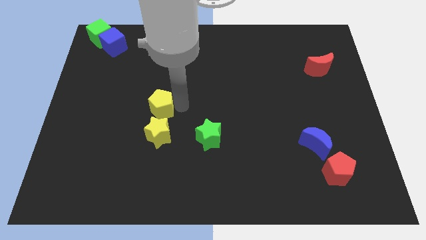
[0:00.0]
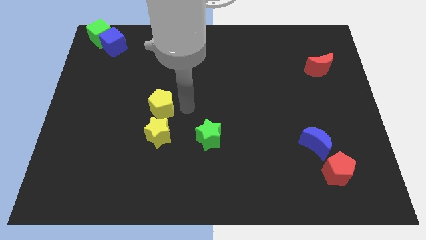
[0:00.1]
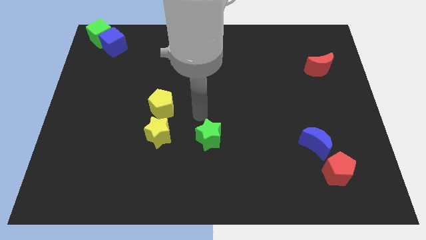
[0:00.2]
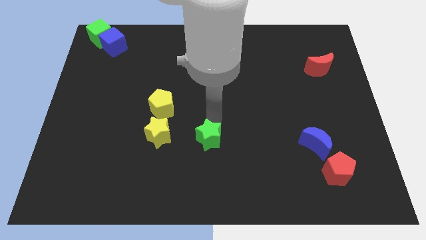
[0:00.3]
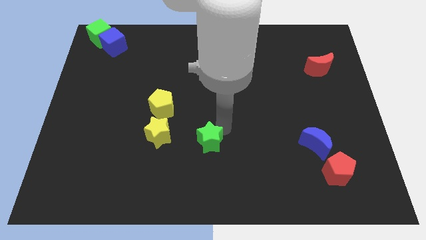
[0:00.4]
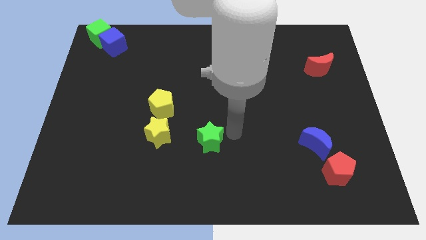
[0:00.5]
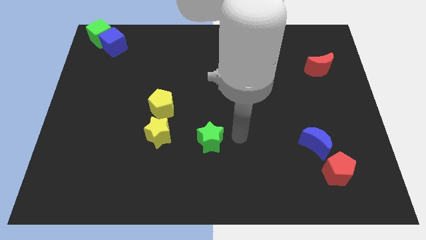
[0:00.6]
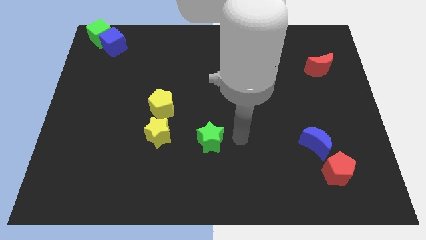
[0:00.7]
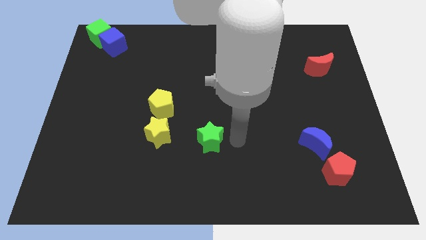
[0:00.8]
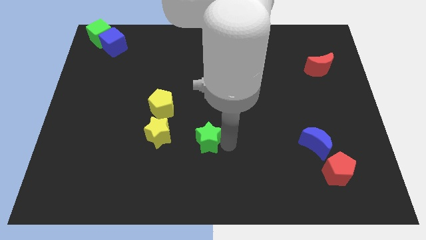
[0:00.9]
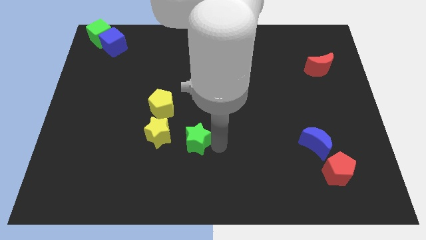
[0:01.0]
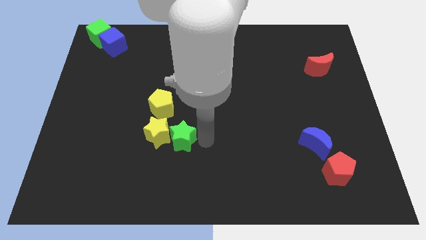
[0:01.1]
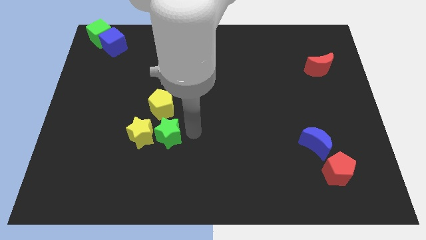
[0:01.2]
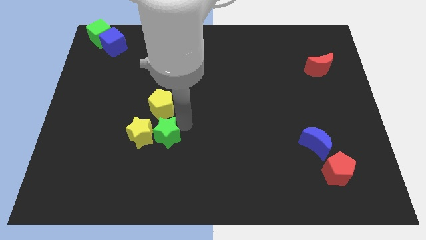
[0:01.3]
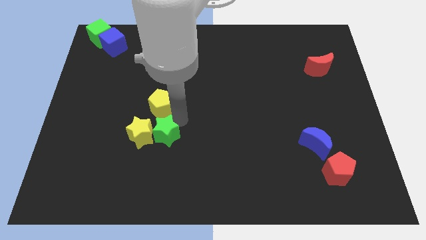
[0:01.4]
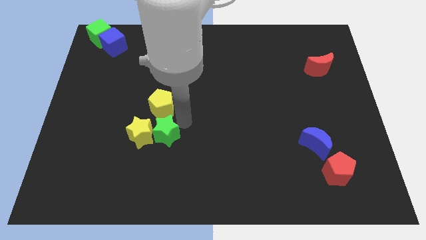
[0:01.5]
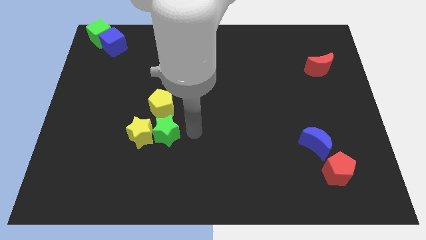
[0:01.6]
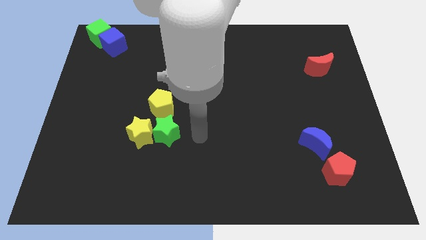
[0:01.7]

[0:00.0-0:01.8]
push the green star into yellow star

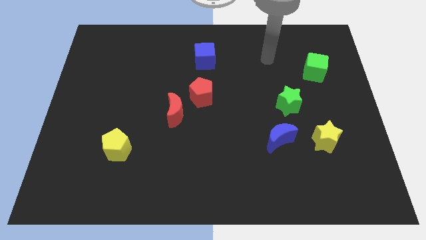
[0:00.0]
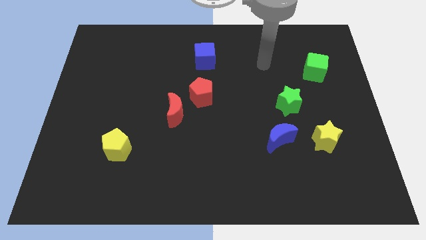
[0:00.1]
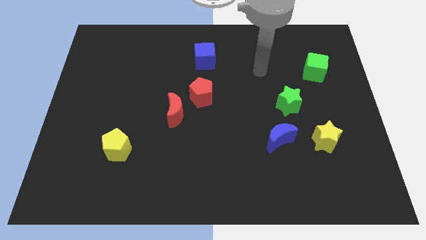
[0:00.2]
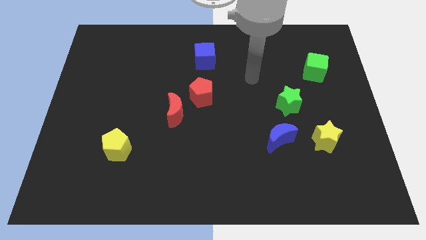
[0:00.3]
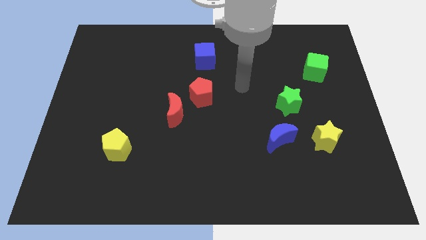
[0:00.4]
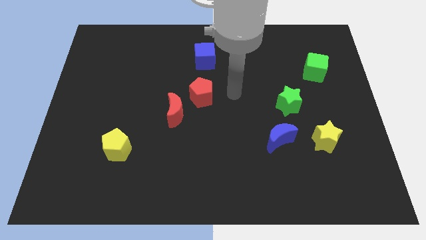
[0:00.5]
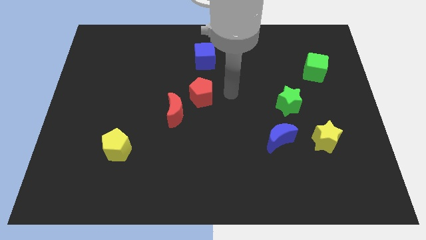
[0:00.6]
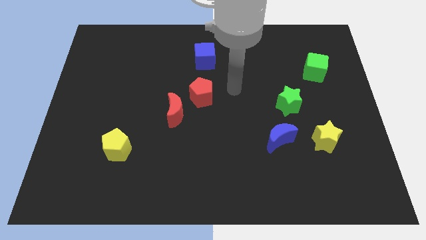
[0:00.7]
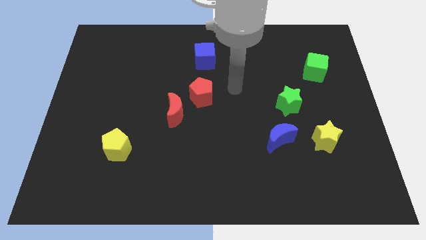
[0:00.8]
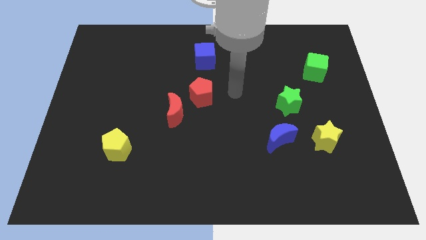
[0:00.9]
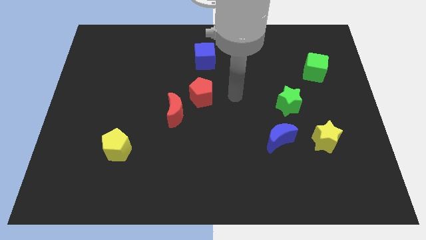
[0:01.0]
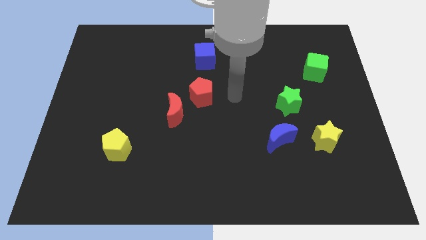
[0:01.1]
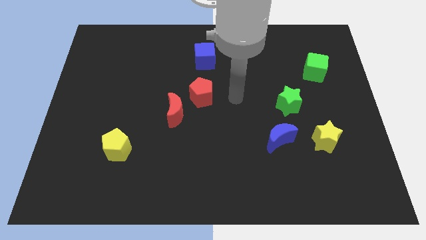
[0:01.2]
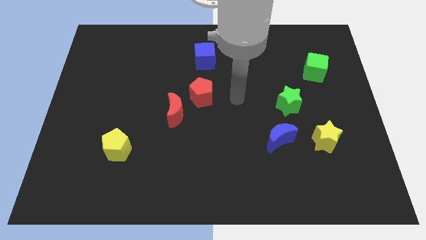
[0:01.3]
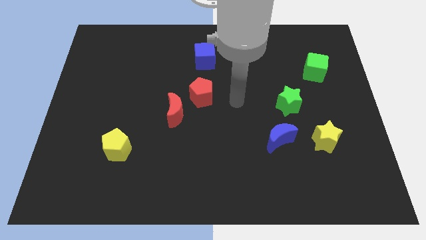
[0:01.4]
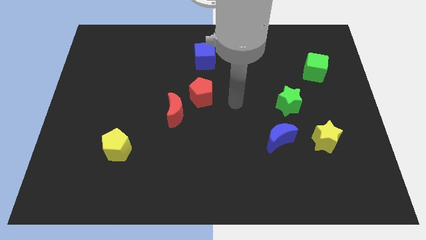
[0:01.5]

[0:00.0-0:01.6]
place your arm to the right of the red pentagon

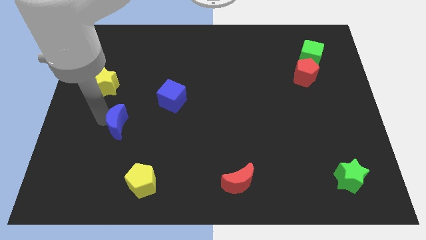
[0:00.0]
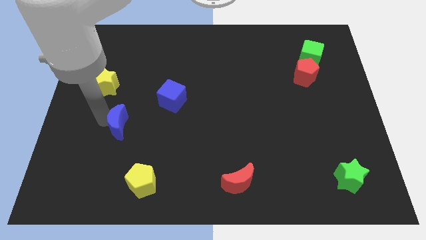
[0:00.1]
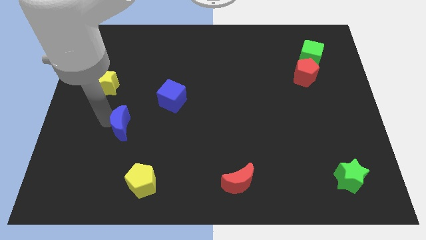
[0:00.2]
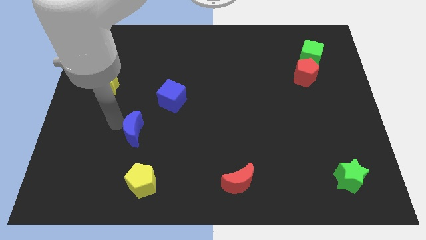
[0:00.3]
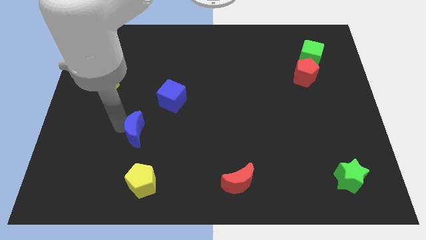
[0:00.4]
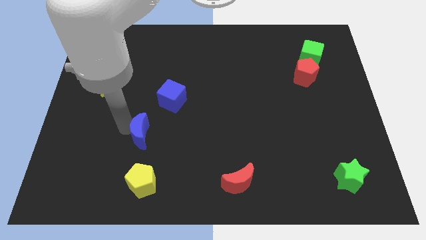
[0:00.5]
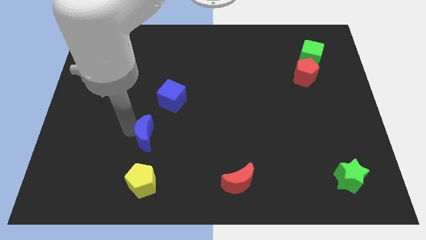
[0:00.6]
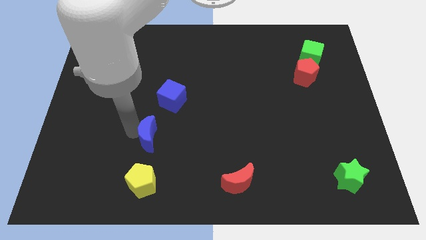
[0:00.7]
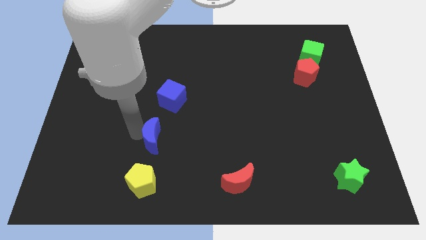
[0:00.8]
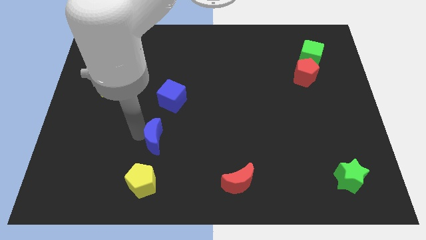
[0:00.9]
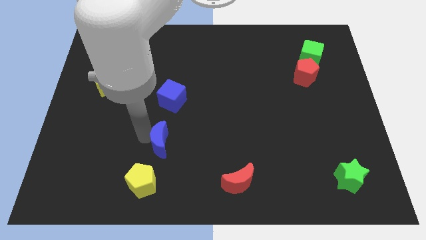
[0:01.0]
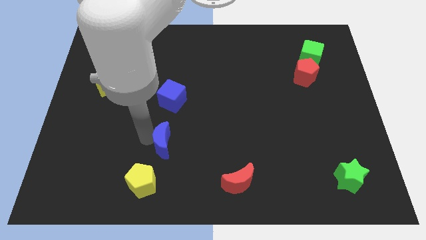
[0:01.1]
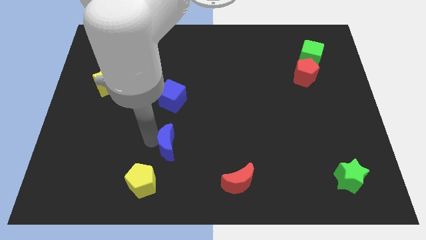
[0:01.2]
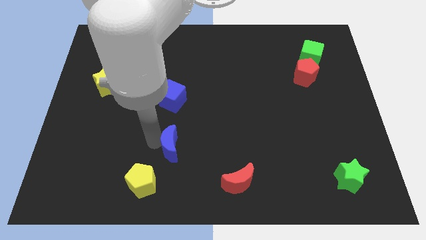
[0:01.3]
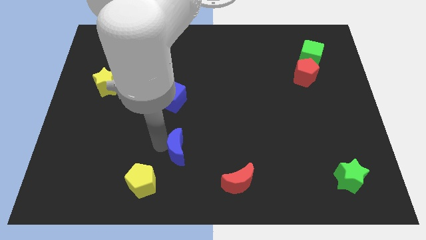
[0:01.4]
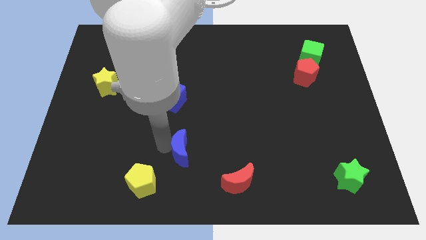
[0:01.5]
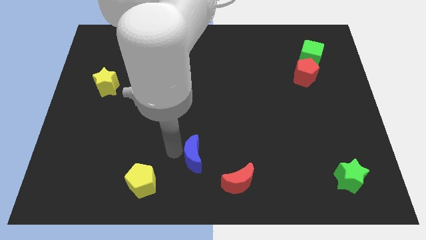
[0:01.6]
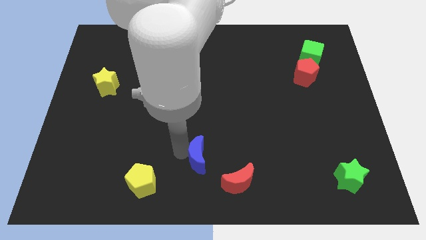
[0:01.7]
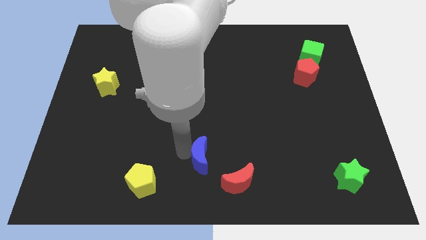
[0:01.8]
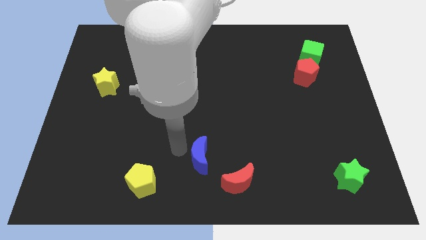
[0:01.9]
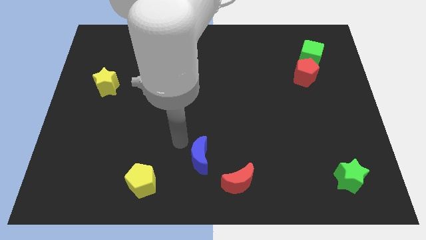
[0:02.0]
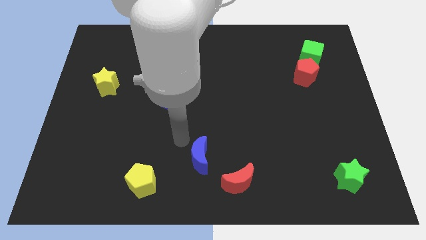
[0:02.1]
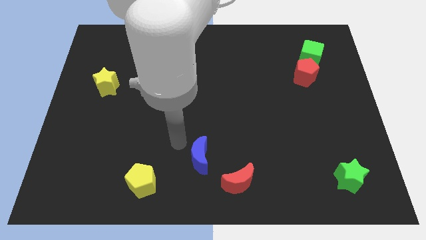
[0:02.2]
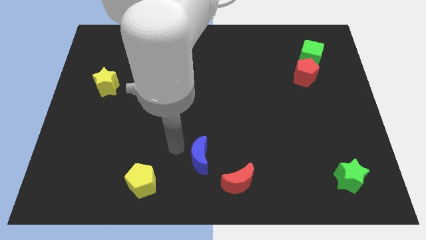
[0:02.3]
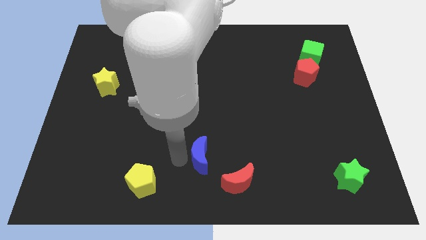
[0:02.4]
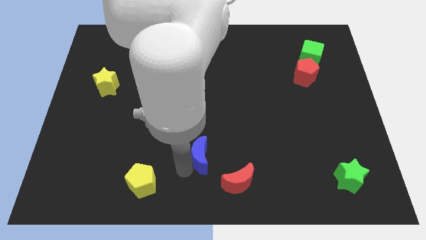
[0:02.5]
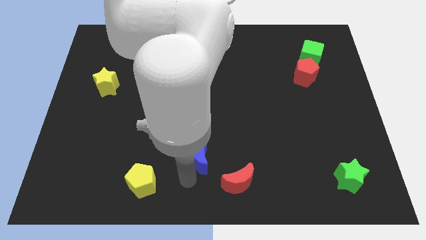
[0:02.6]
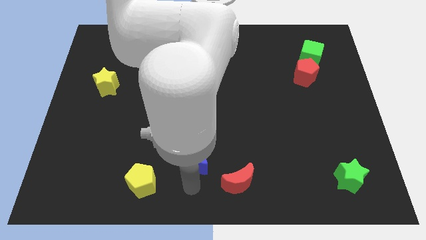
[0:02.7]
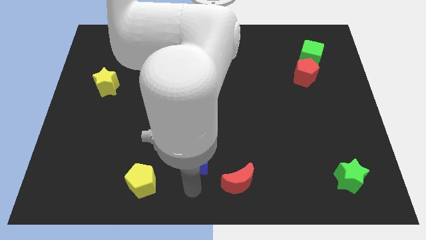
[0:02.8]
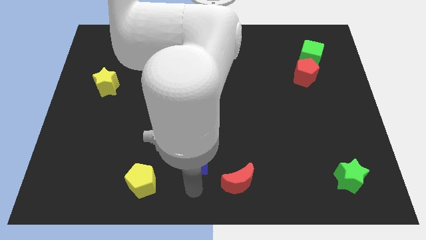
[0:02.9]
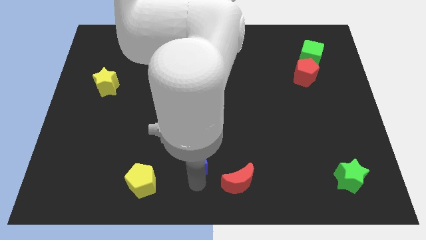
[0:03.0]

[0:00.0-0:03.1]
move blue crescent towards red crescent

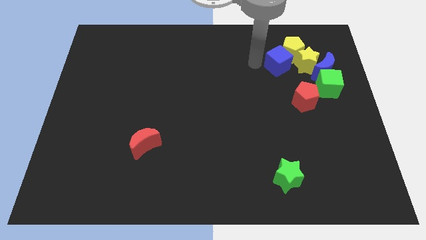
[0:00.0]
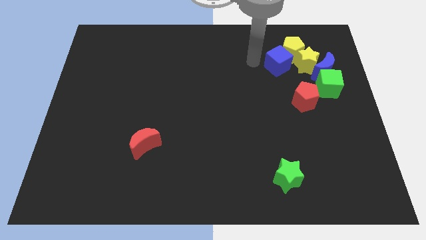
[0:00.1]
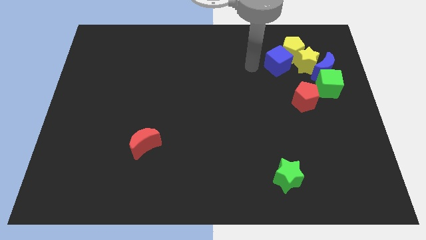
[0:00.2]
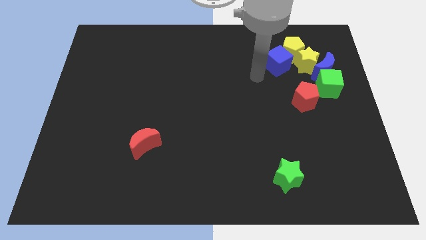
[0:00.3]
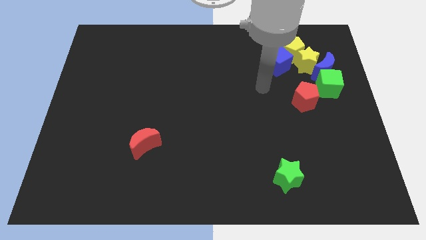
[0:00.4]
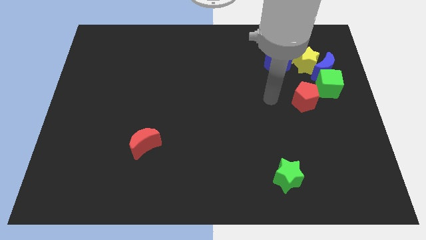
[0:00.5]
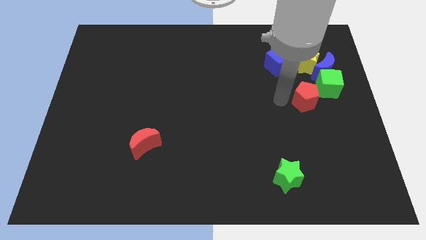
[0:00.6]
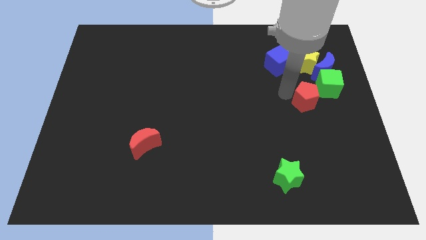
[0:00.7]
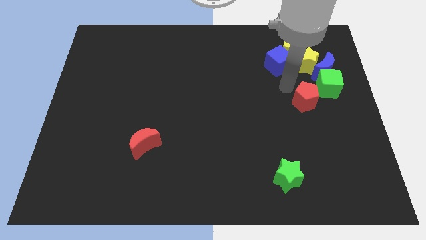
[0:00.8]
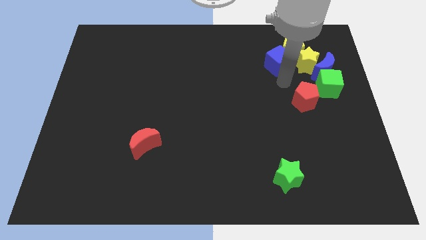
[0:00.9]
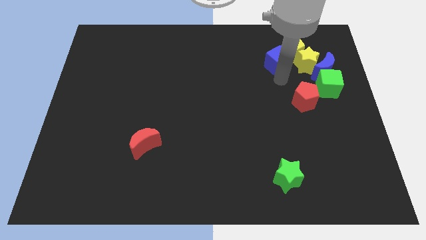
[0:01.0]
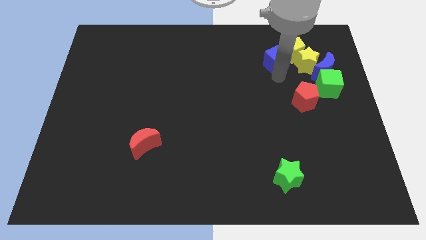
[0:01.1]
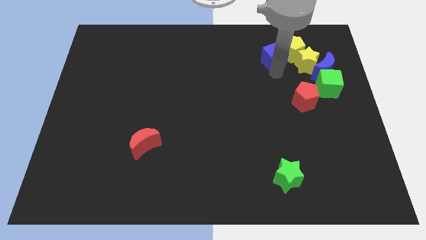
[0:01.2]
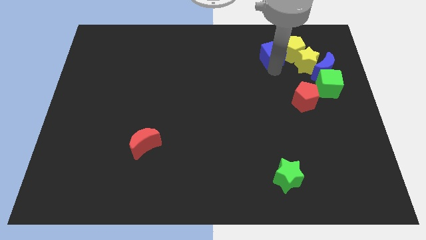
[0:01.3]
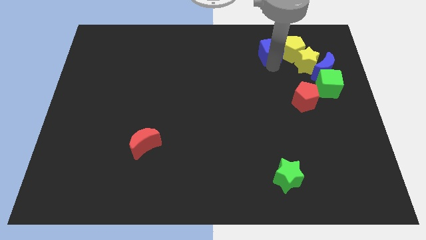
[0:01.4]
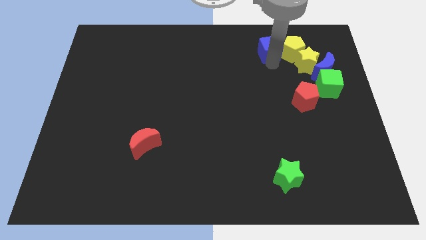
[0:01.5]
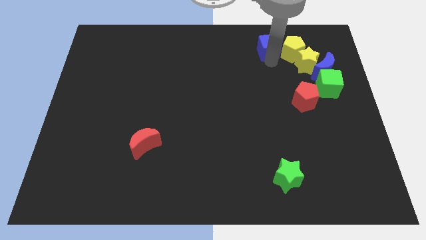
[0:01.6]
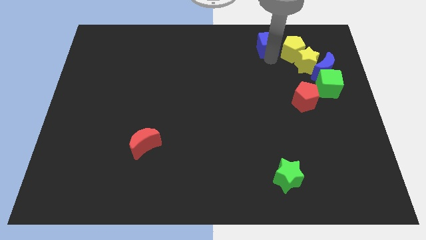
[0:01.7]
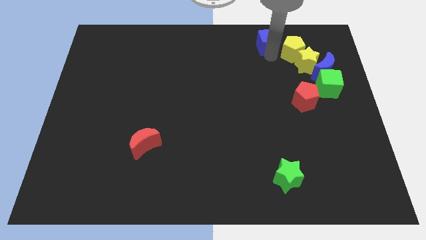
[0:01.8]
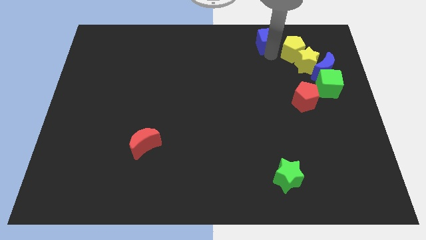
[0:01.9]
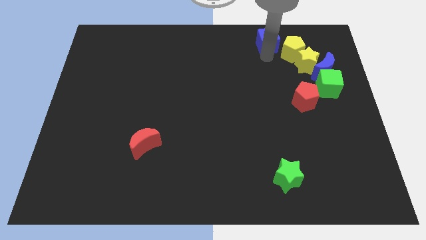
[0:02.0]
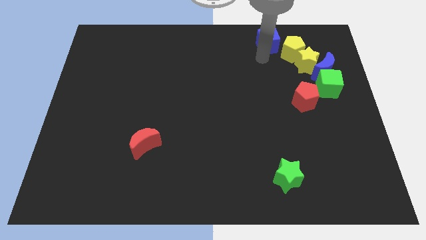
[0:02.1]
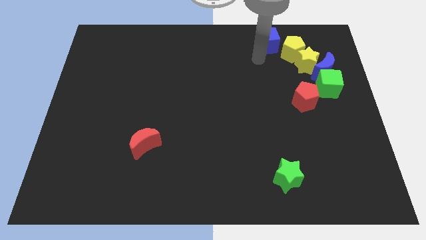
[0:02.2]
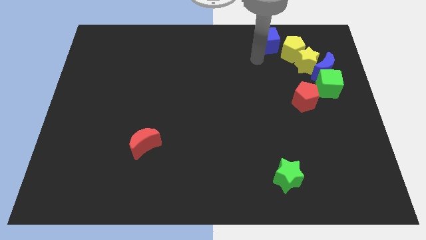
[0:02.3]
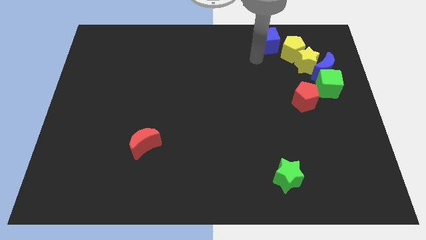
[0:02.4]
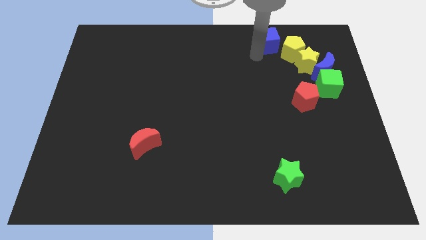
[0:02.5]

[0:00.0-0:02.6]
separate the blue cube and the yellow pentagon
